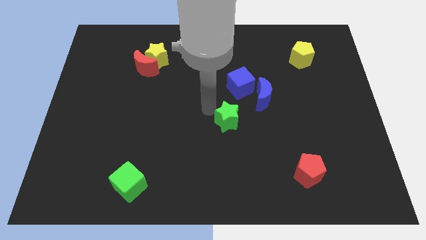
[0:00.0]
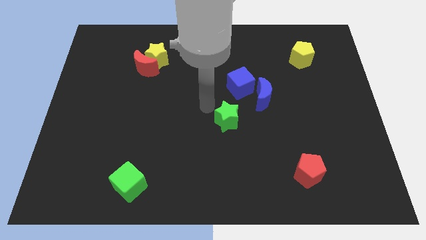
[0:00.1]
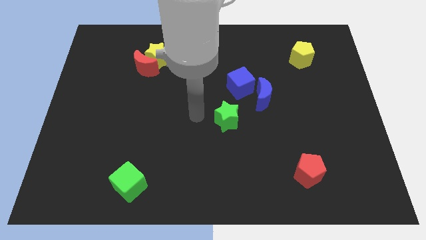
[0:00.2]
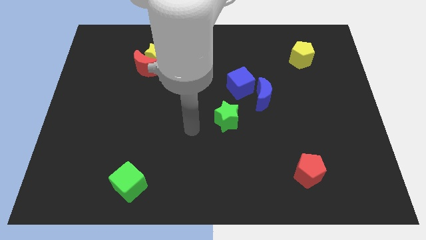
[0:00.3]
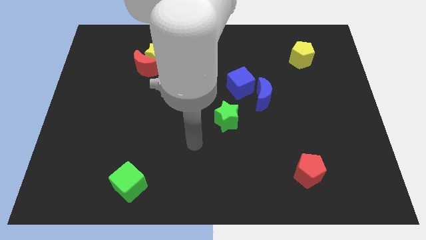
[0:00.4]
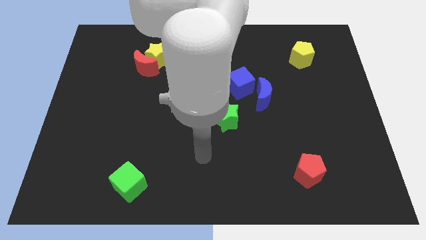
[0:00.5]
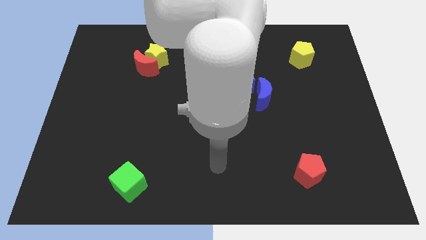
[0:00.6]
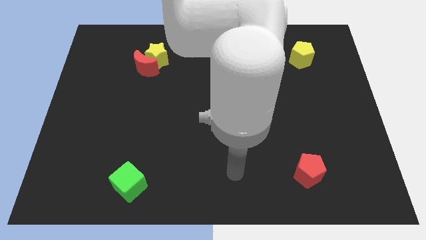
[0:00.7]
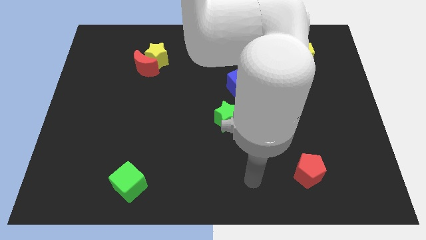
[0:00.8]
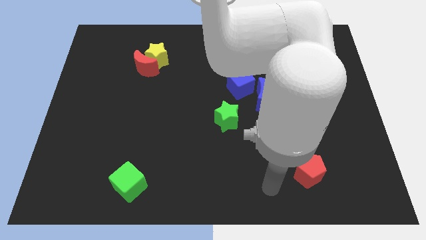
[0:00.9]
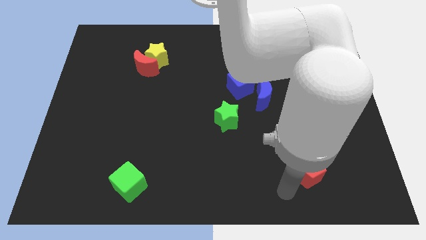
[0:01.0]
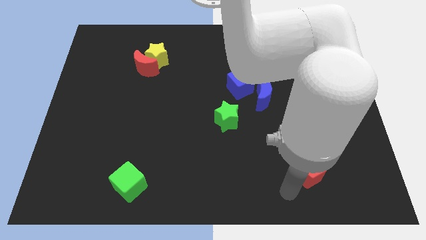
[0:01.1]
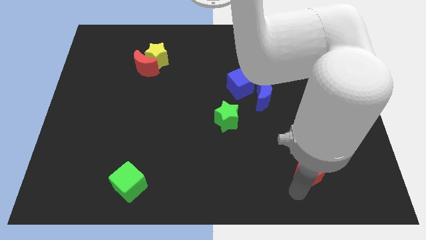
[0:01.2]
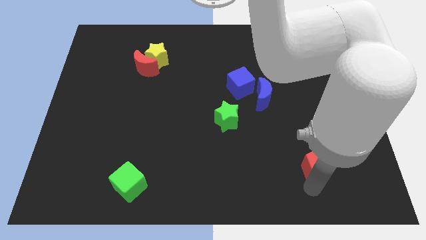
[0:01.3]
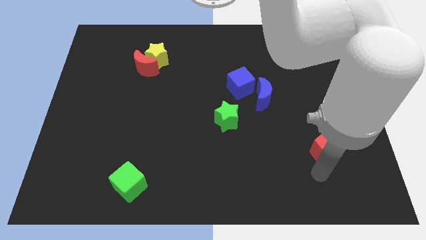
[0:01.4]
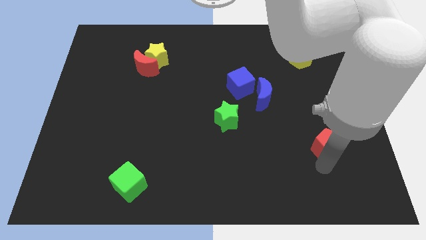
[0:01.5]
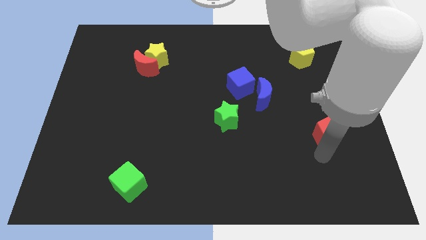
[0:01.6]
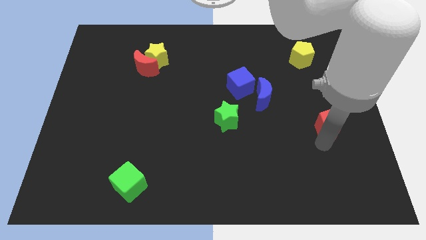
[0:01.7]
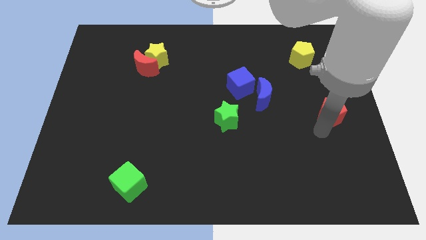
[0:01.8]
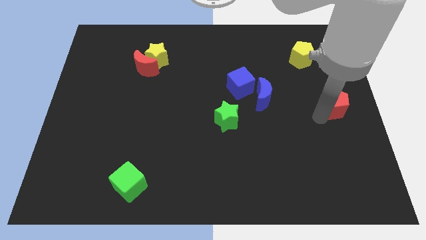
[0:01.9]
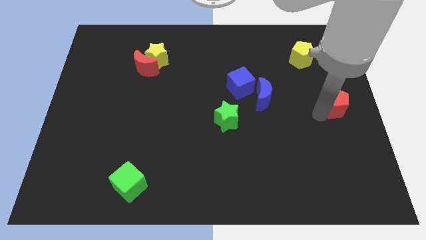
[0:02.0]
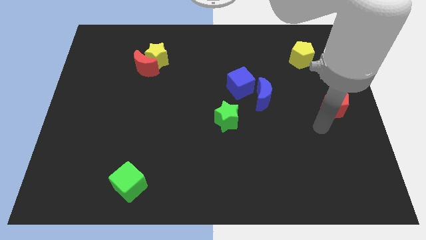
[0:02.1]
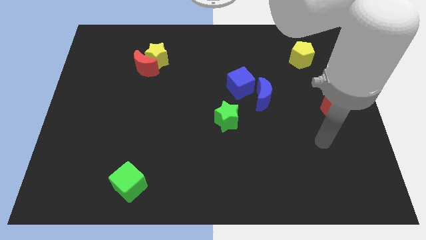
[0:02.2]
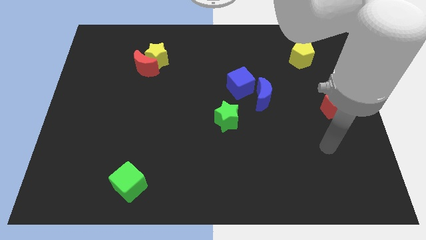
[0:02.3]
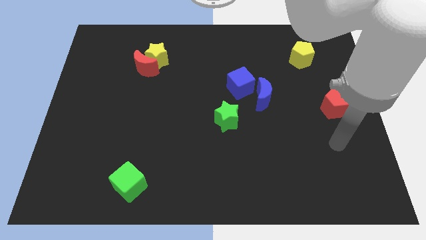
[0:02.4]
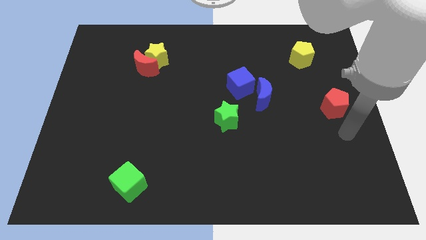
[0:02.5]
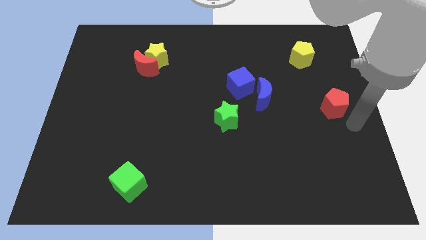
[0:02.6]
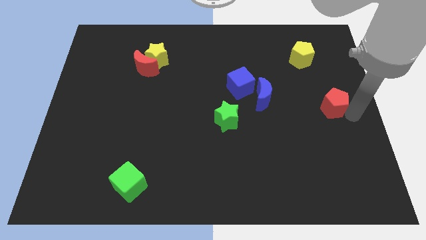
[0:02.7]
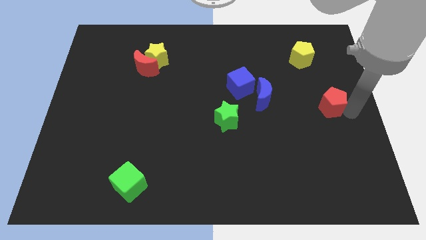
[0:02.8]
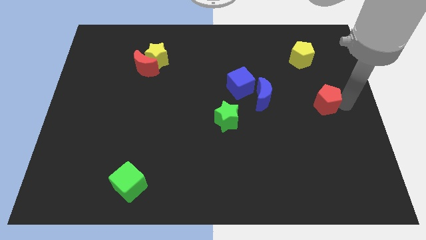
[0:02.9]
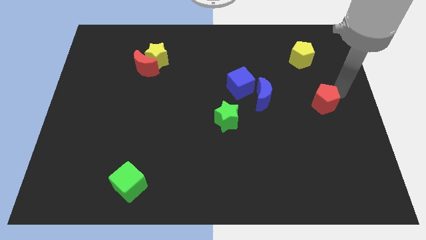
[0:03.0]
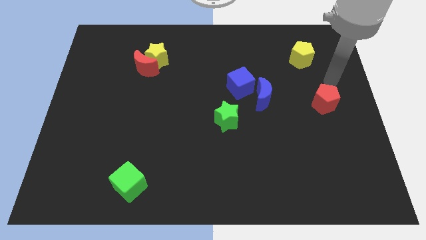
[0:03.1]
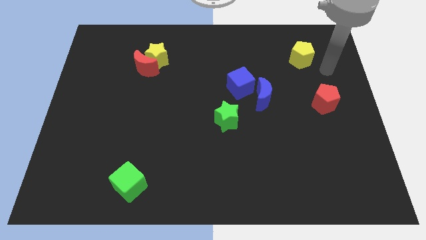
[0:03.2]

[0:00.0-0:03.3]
put the red pentagon at the right side of the blue crescent

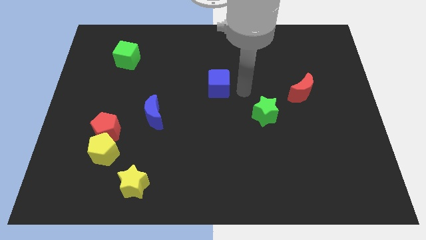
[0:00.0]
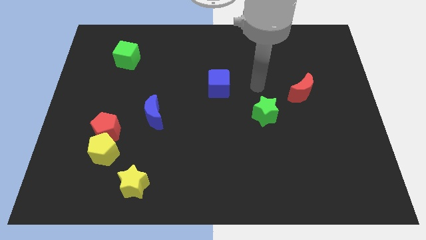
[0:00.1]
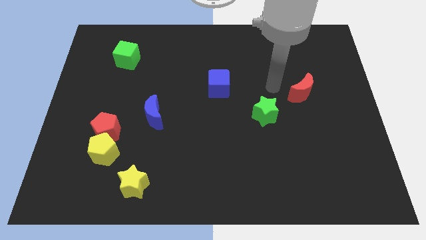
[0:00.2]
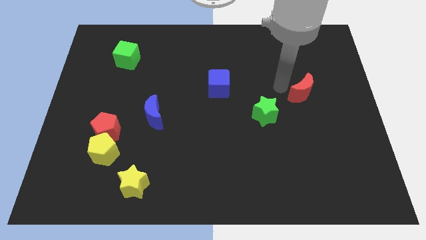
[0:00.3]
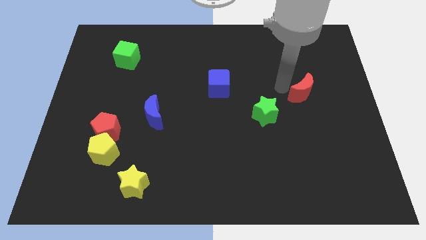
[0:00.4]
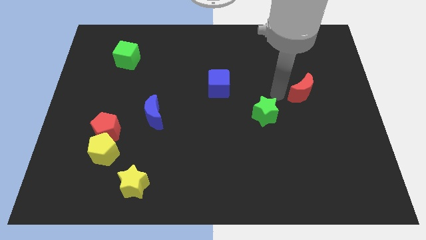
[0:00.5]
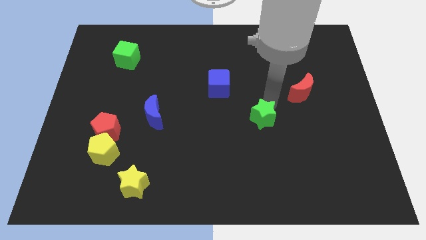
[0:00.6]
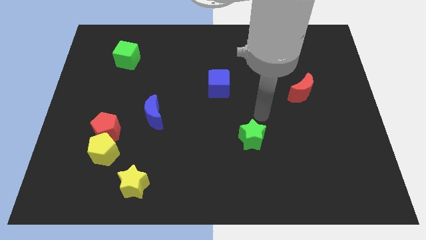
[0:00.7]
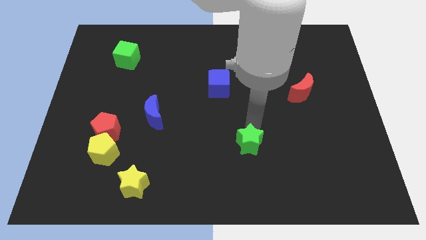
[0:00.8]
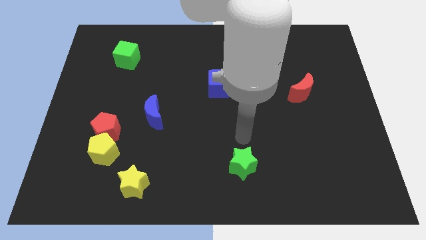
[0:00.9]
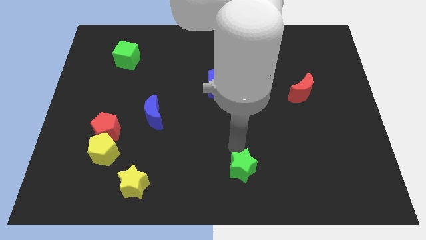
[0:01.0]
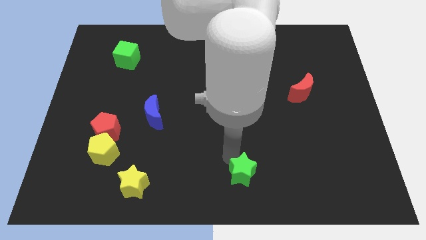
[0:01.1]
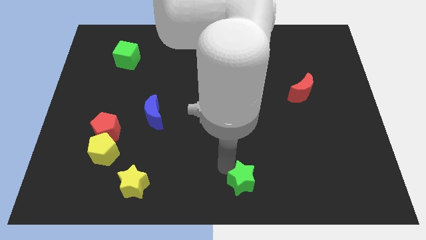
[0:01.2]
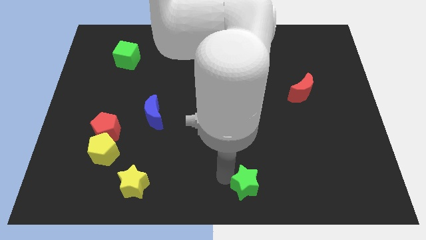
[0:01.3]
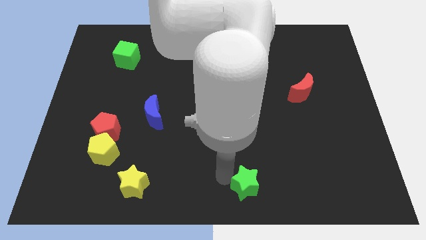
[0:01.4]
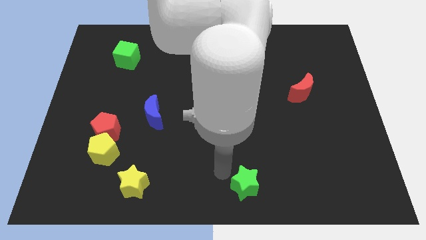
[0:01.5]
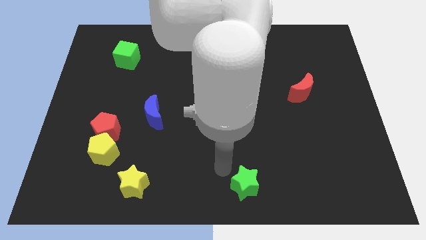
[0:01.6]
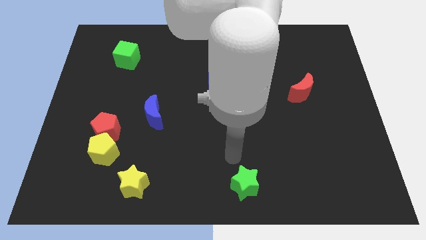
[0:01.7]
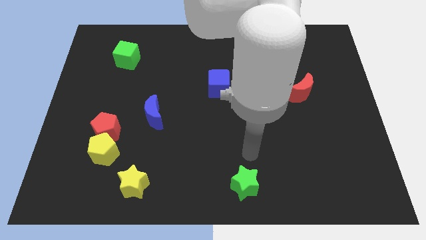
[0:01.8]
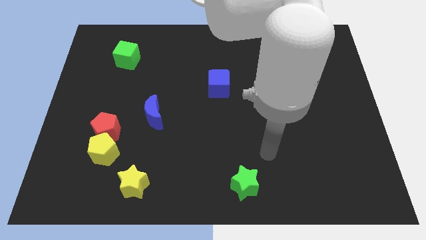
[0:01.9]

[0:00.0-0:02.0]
push the green star to bottom center of the board

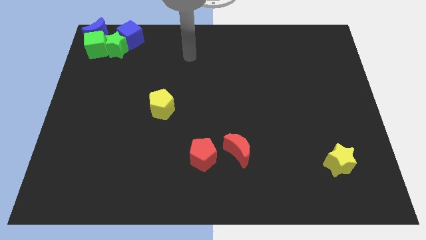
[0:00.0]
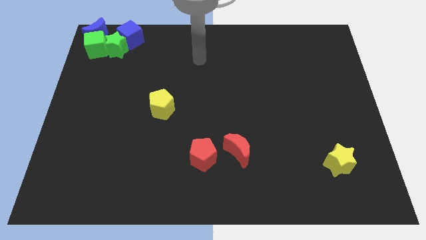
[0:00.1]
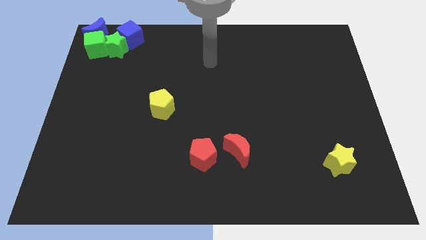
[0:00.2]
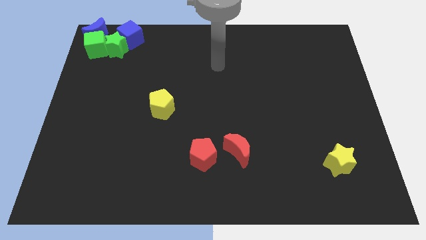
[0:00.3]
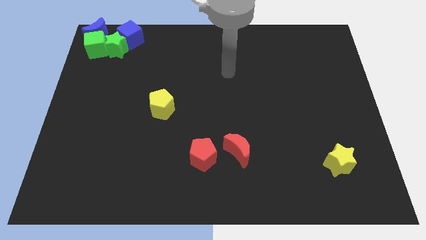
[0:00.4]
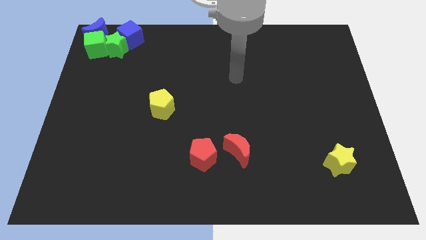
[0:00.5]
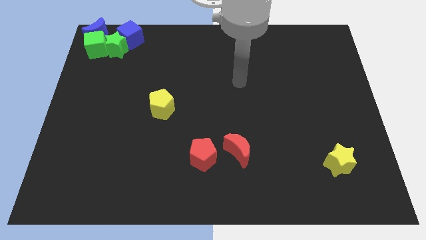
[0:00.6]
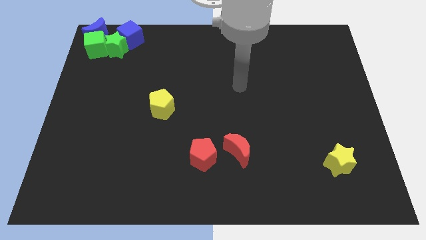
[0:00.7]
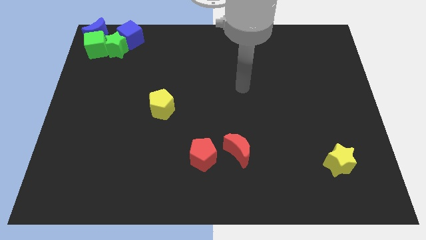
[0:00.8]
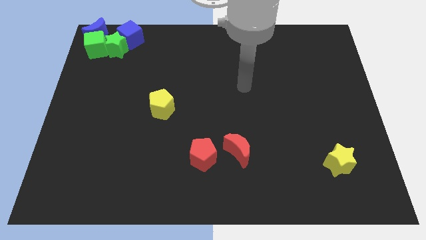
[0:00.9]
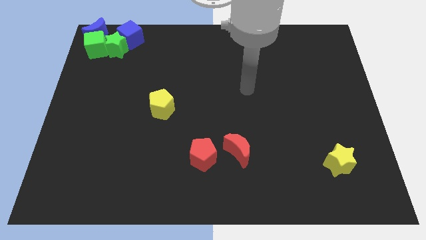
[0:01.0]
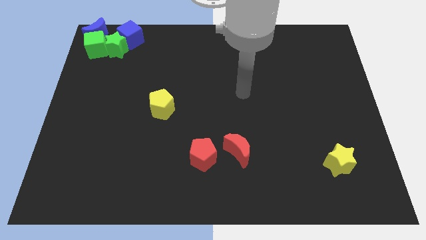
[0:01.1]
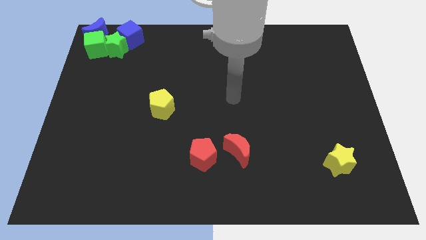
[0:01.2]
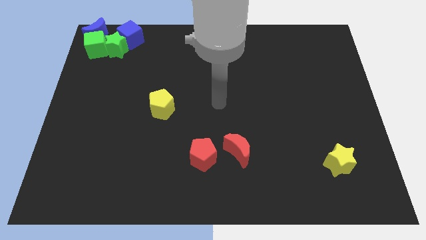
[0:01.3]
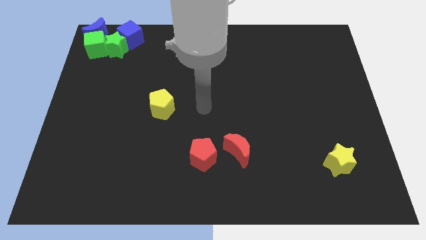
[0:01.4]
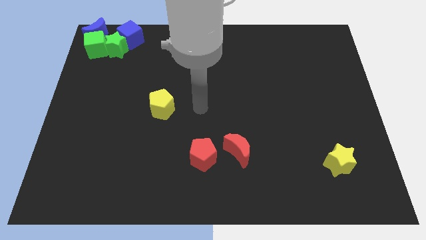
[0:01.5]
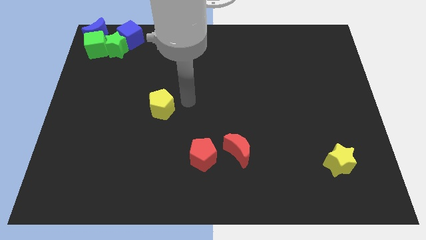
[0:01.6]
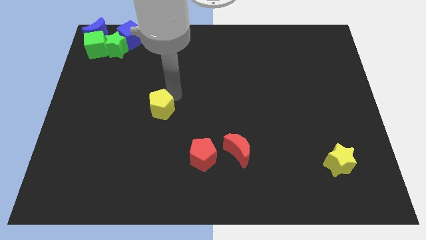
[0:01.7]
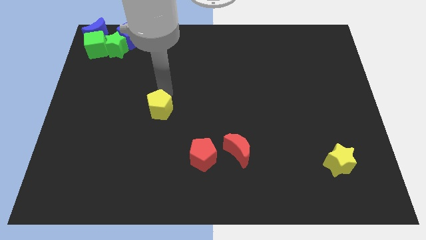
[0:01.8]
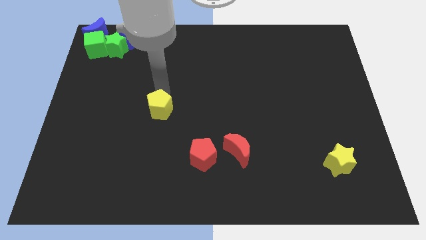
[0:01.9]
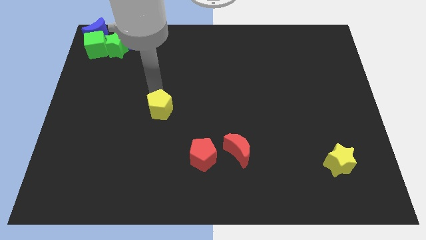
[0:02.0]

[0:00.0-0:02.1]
move the arm towards the top side of the yellow pentagon

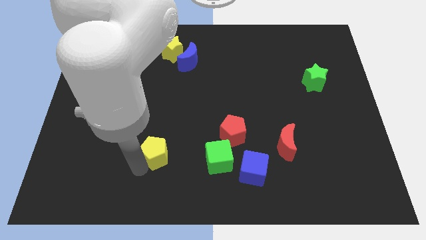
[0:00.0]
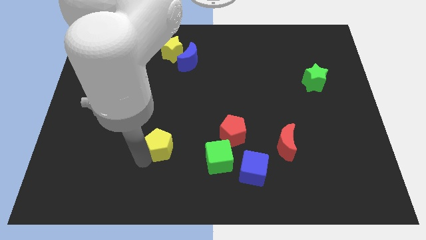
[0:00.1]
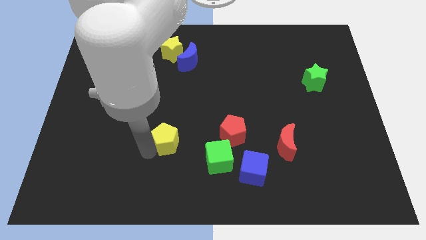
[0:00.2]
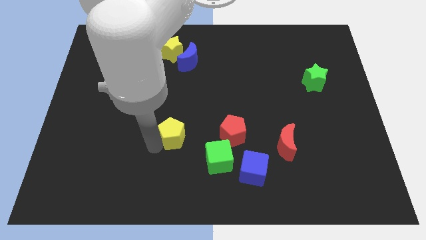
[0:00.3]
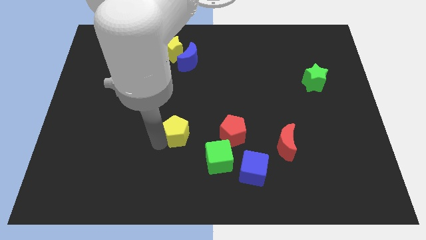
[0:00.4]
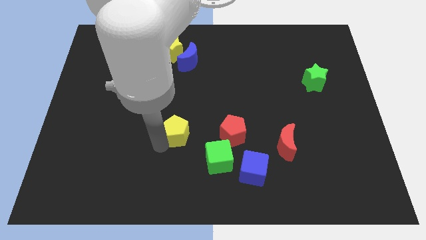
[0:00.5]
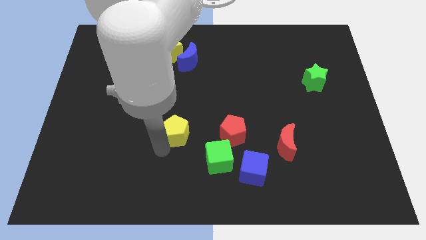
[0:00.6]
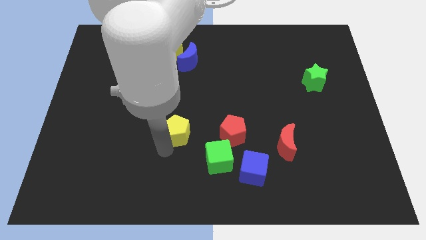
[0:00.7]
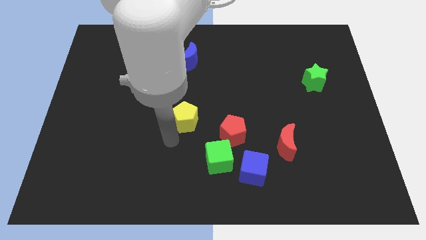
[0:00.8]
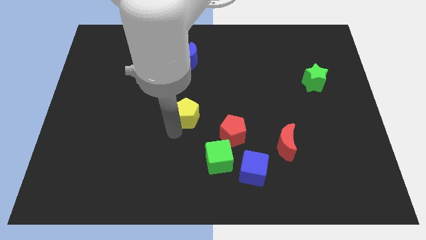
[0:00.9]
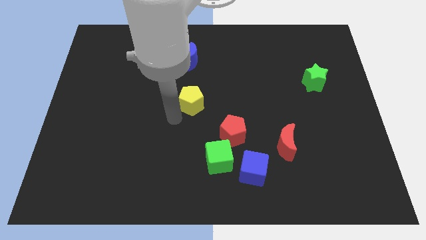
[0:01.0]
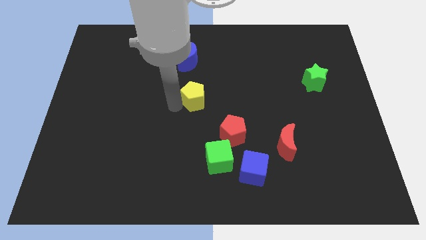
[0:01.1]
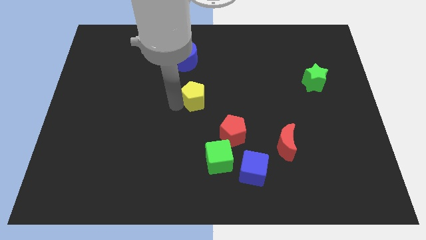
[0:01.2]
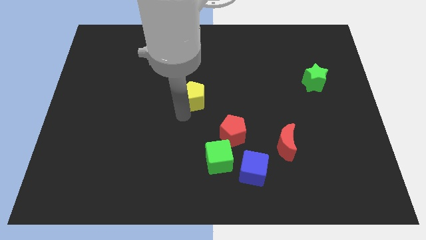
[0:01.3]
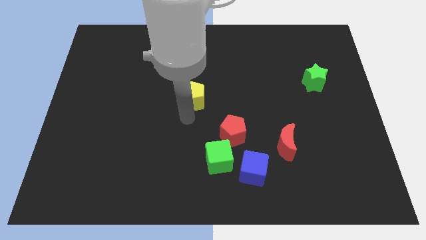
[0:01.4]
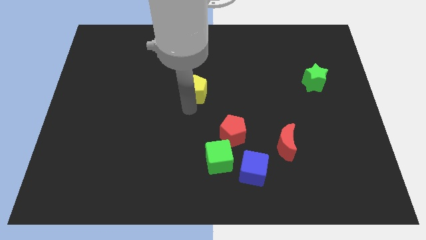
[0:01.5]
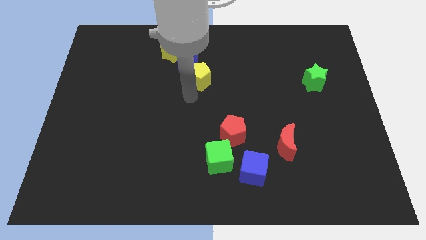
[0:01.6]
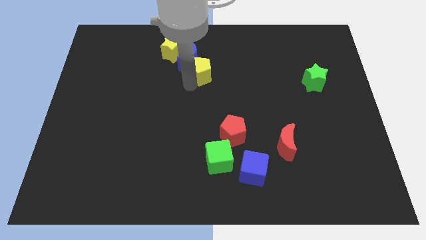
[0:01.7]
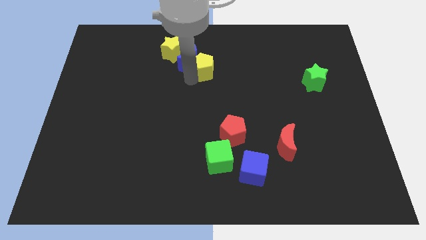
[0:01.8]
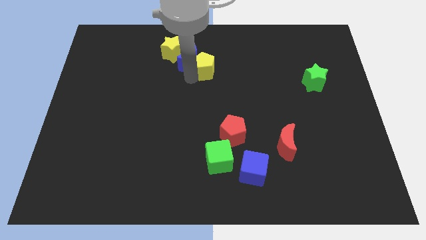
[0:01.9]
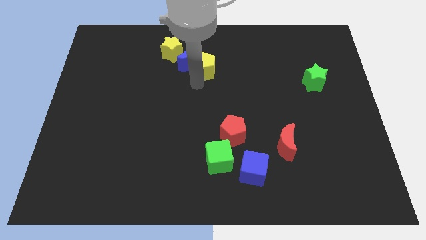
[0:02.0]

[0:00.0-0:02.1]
push yellow pentagon close to blue moon
